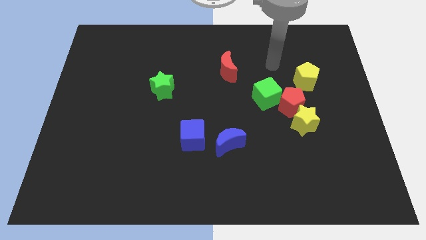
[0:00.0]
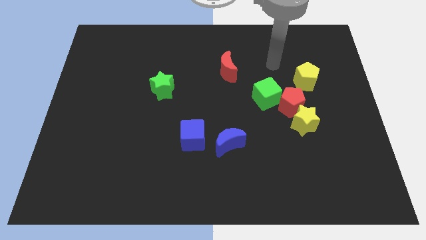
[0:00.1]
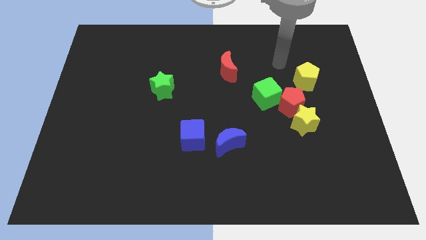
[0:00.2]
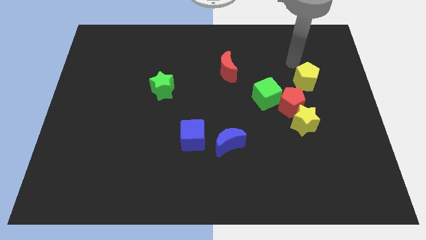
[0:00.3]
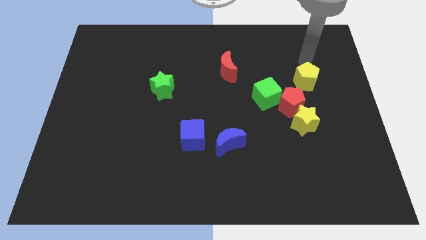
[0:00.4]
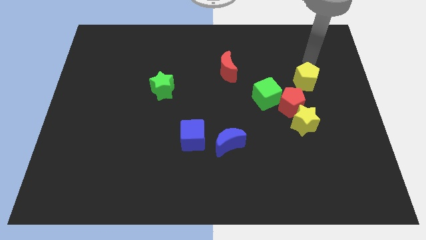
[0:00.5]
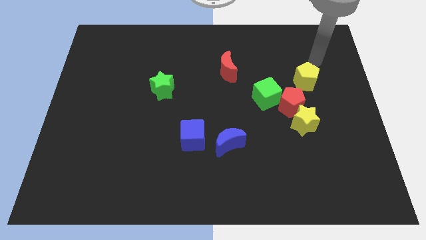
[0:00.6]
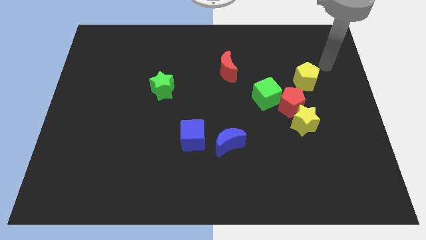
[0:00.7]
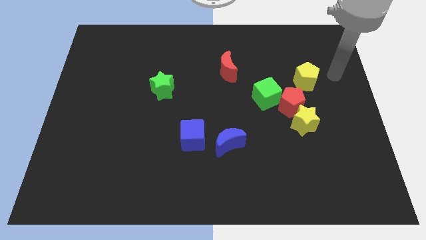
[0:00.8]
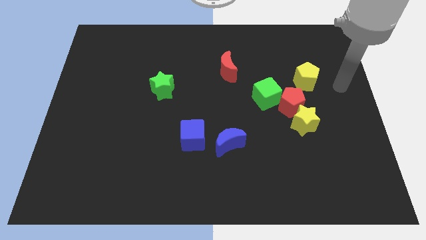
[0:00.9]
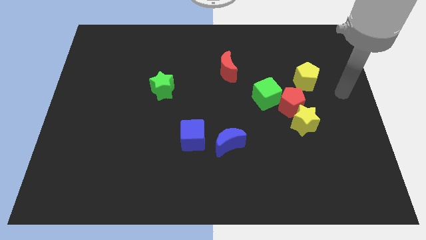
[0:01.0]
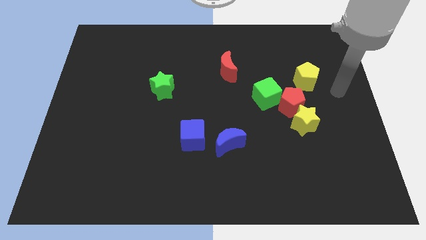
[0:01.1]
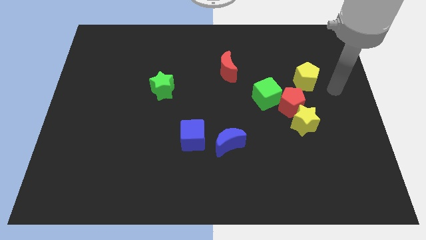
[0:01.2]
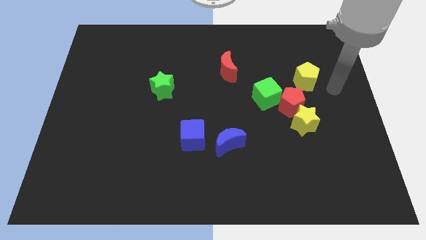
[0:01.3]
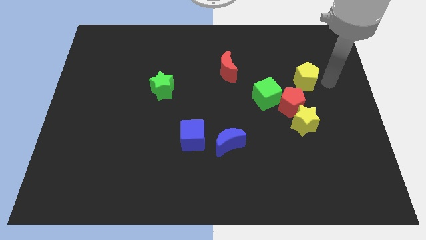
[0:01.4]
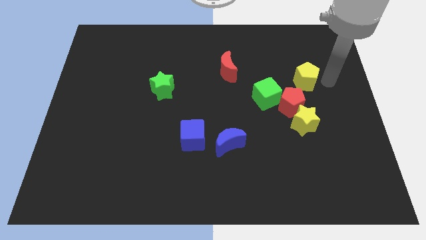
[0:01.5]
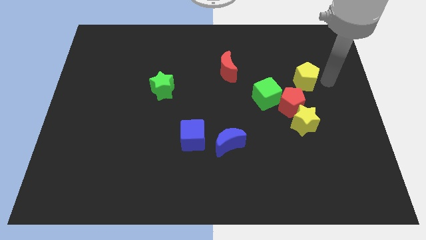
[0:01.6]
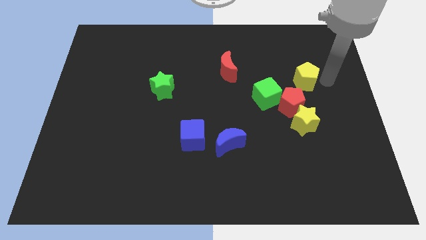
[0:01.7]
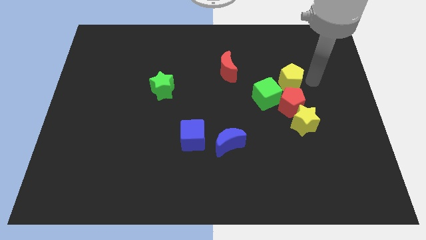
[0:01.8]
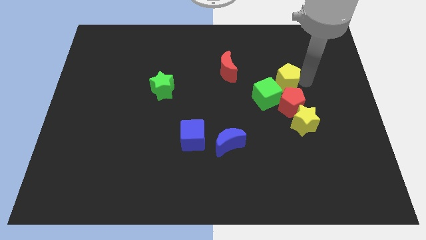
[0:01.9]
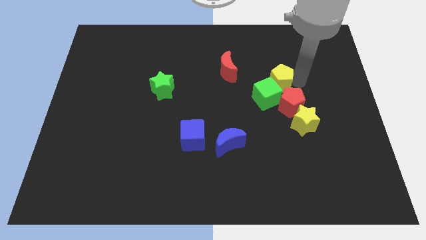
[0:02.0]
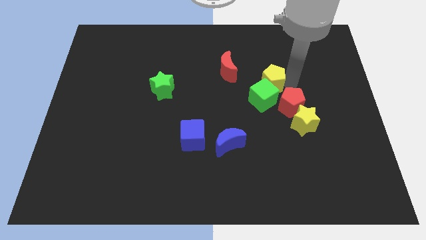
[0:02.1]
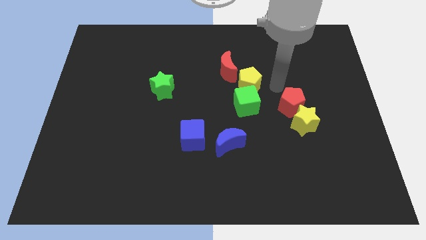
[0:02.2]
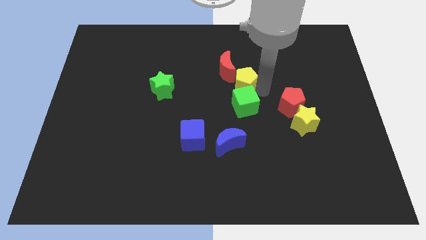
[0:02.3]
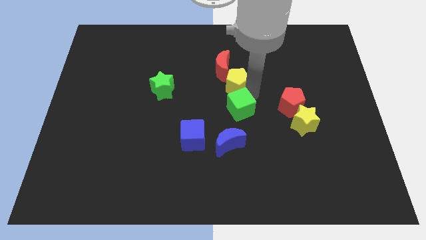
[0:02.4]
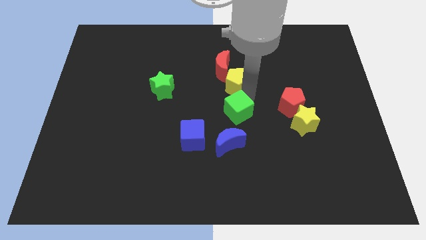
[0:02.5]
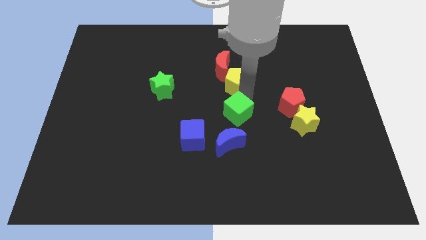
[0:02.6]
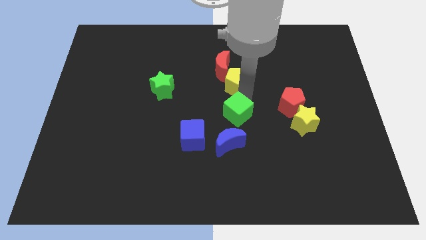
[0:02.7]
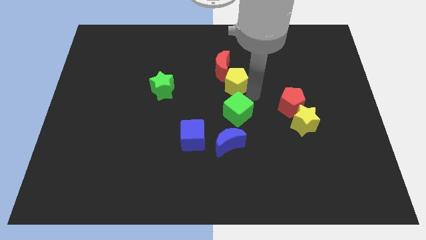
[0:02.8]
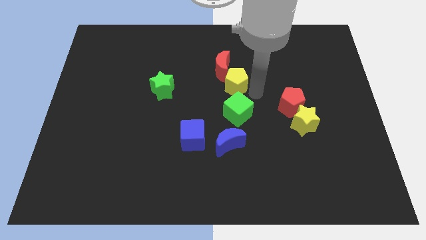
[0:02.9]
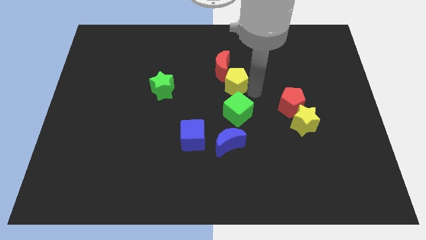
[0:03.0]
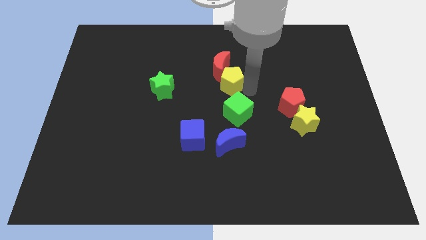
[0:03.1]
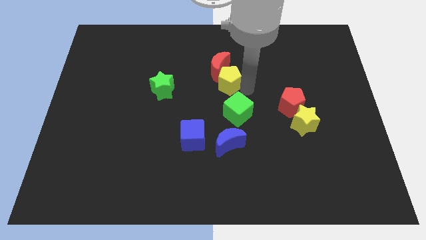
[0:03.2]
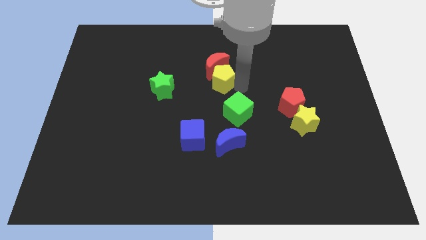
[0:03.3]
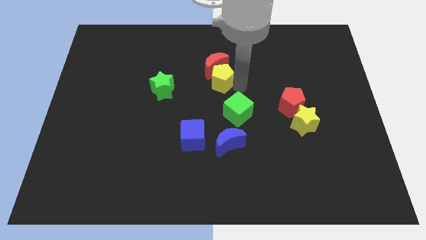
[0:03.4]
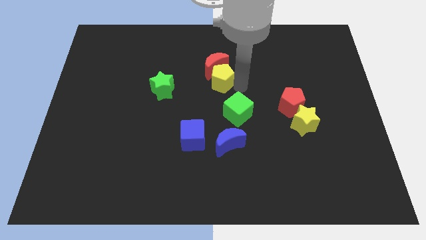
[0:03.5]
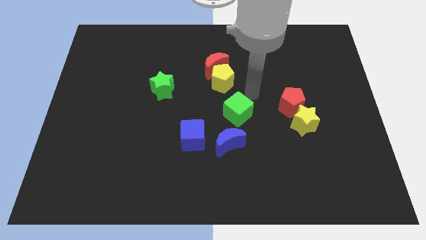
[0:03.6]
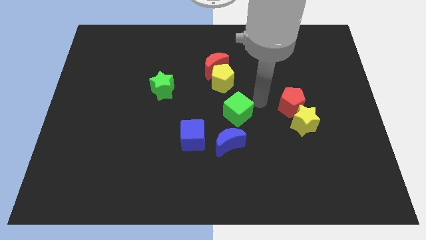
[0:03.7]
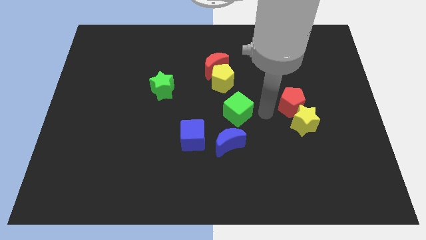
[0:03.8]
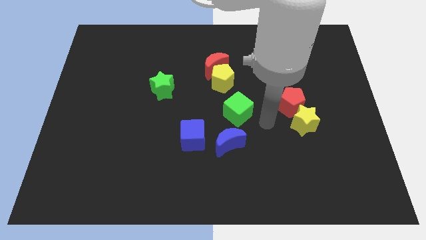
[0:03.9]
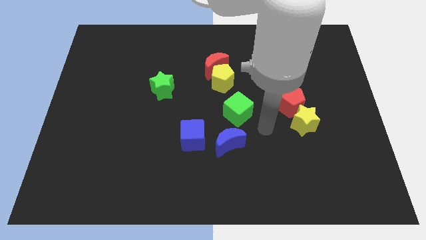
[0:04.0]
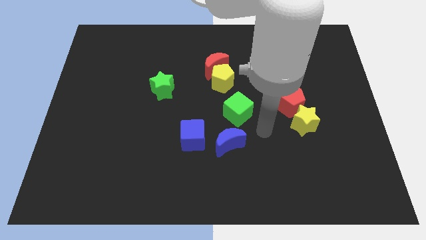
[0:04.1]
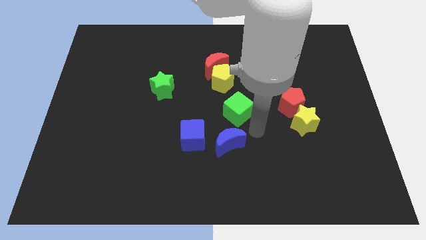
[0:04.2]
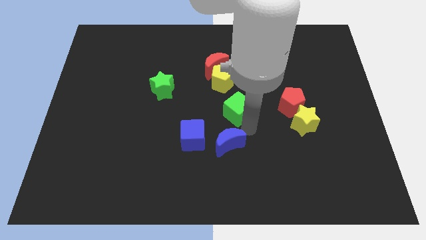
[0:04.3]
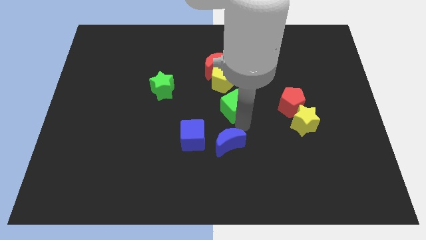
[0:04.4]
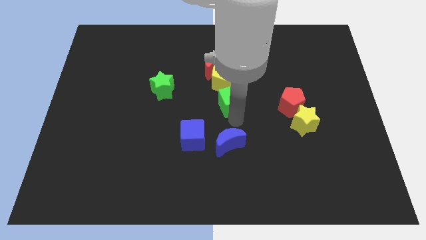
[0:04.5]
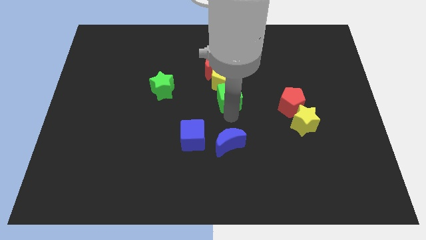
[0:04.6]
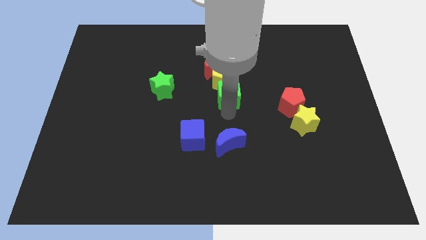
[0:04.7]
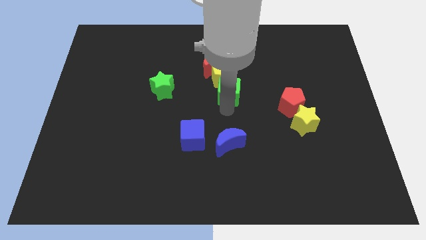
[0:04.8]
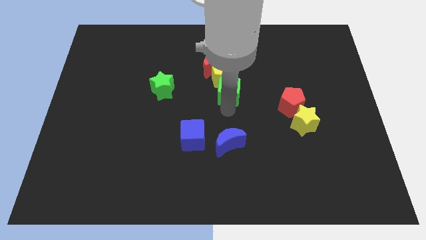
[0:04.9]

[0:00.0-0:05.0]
place the yellow pentagon in between red moon and green cube

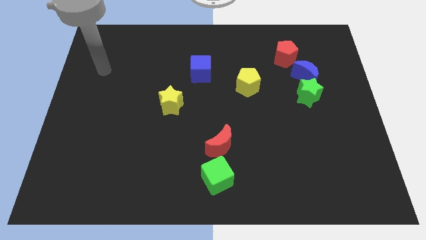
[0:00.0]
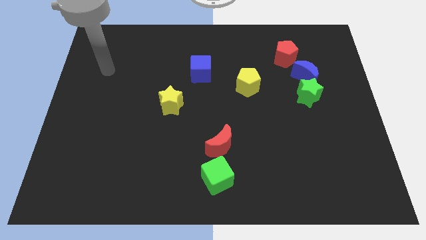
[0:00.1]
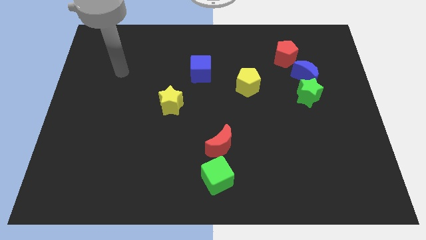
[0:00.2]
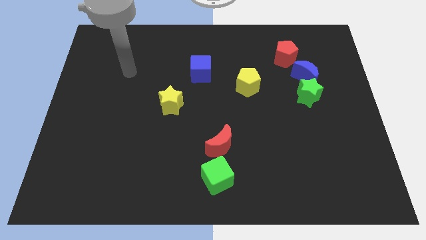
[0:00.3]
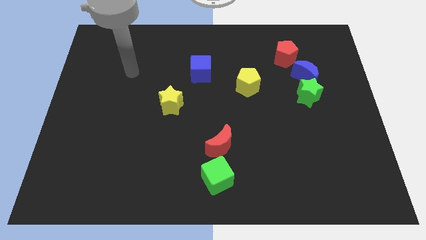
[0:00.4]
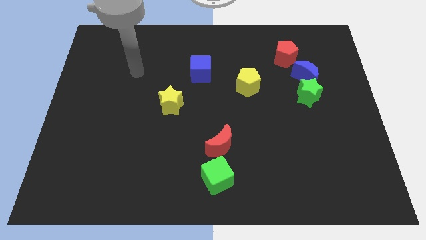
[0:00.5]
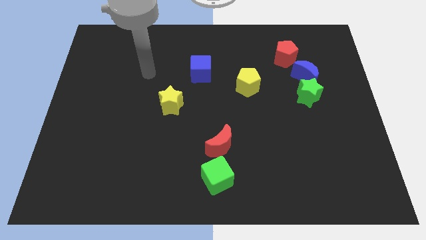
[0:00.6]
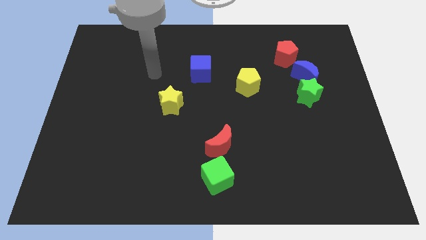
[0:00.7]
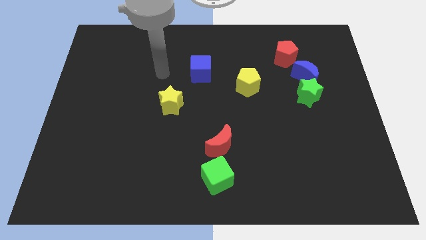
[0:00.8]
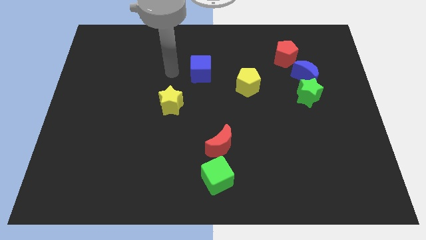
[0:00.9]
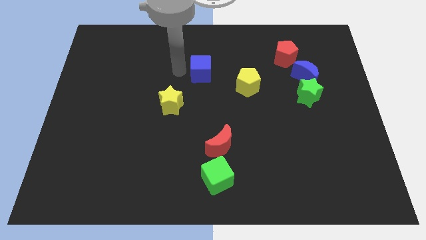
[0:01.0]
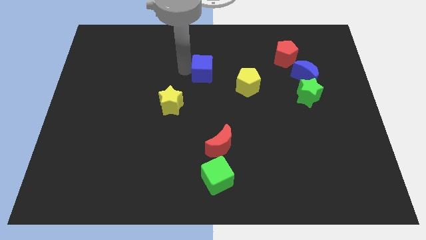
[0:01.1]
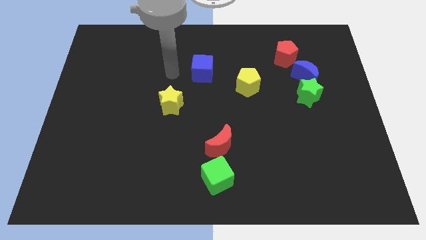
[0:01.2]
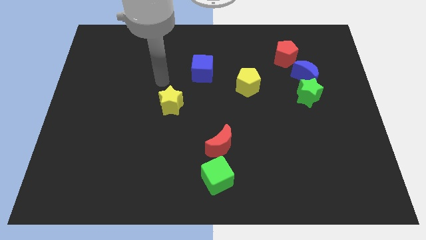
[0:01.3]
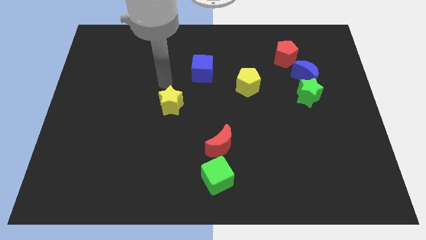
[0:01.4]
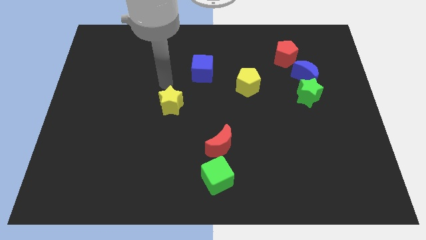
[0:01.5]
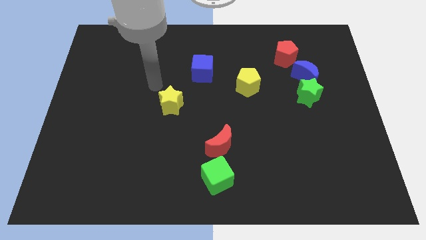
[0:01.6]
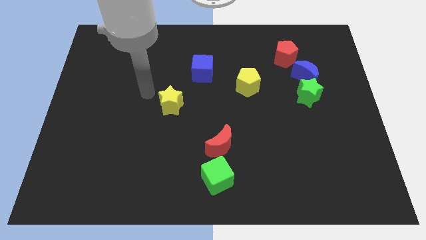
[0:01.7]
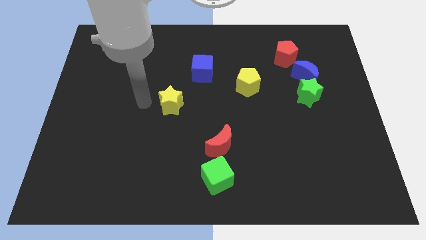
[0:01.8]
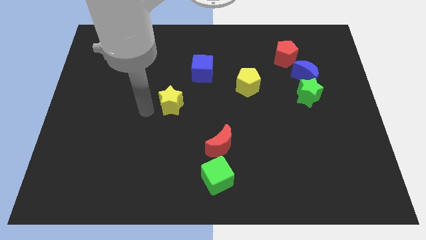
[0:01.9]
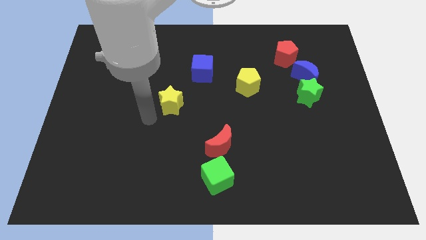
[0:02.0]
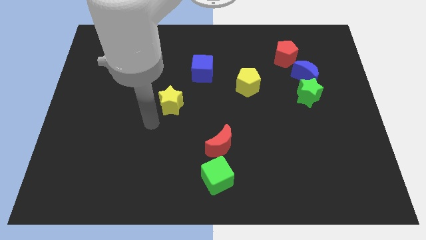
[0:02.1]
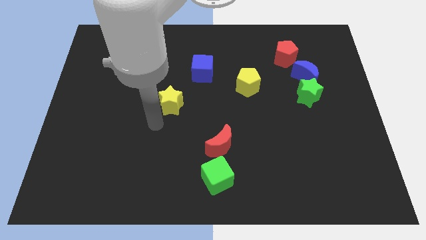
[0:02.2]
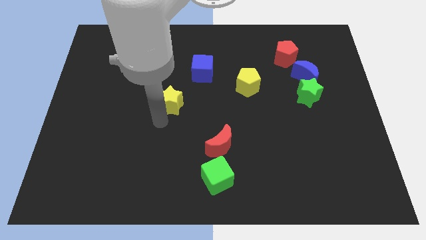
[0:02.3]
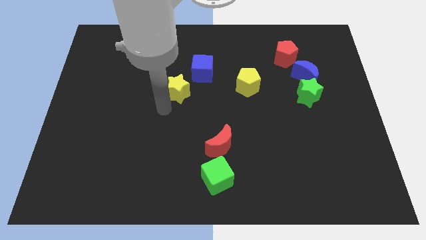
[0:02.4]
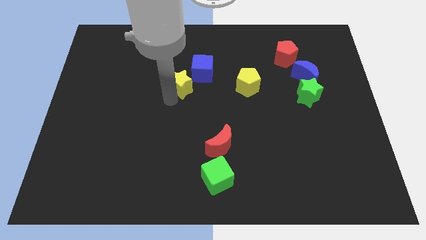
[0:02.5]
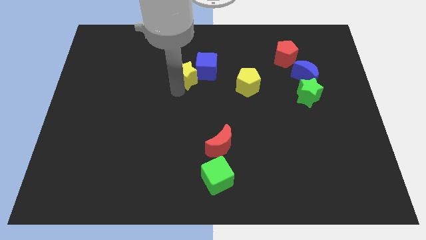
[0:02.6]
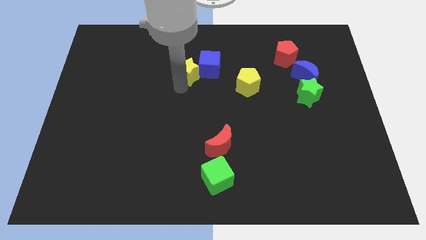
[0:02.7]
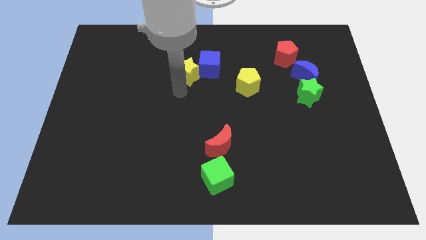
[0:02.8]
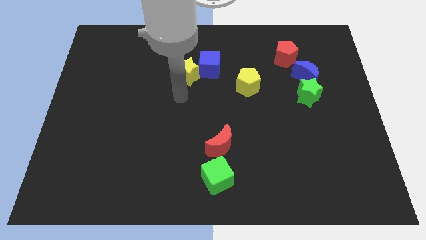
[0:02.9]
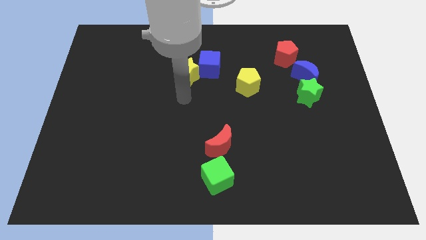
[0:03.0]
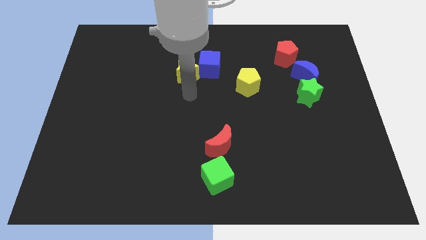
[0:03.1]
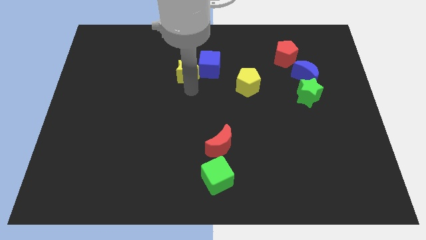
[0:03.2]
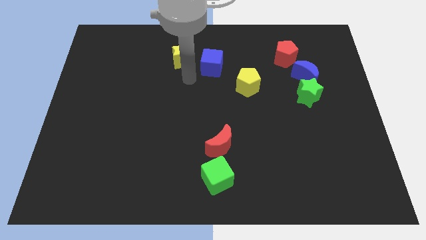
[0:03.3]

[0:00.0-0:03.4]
move the yellow star to the left side of the blue cube

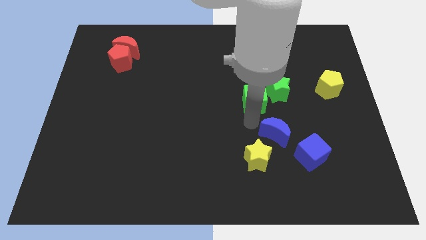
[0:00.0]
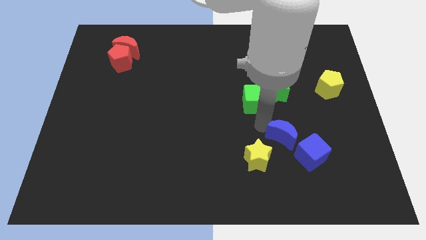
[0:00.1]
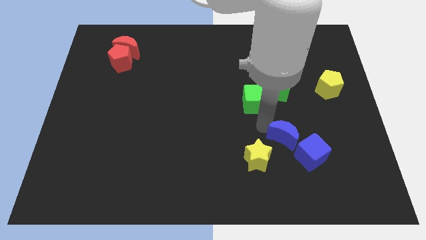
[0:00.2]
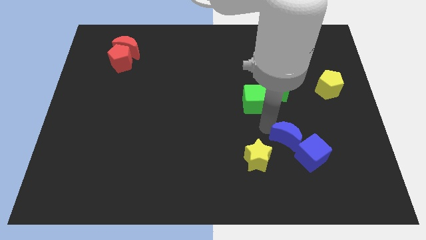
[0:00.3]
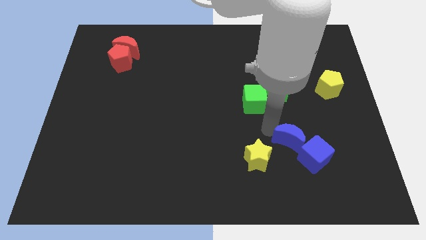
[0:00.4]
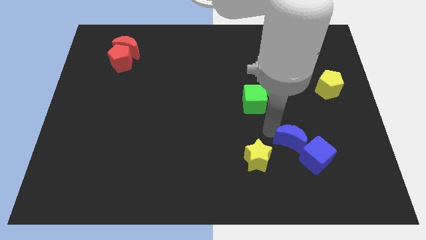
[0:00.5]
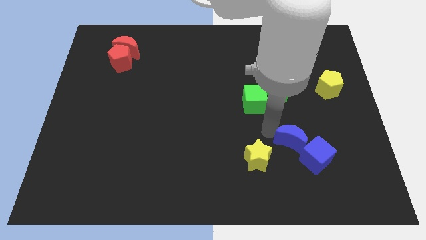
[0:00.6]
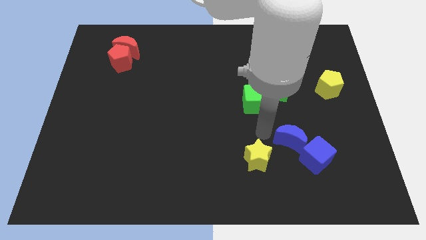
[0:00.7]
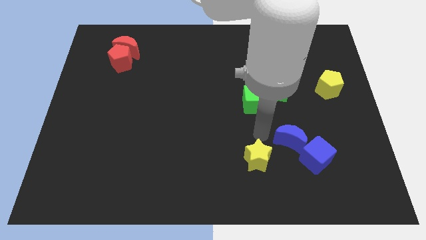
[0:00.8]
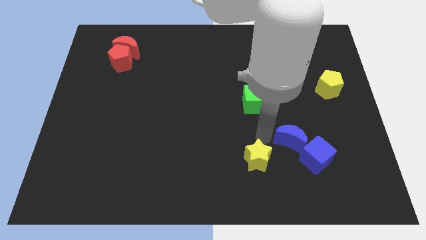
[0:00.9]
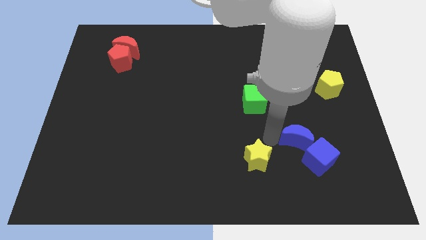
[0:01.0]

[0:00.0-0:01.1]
push the blue crescent into the blue cube
